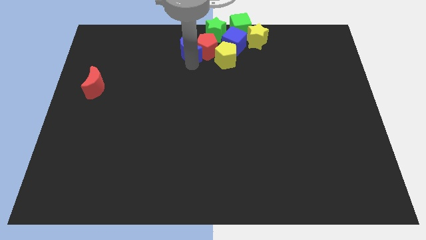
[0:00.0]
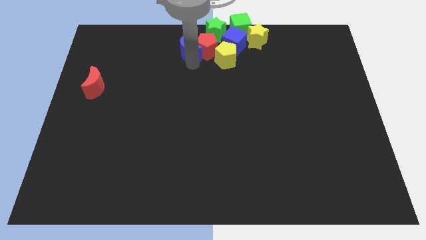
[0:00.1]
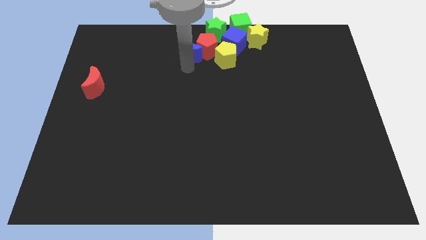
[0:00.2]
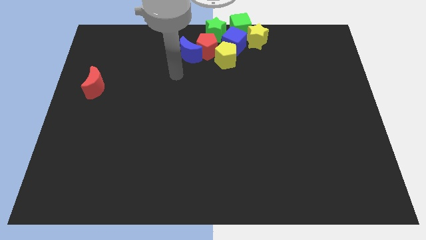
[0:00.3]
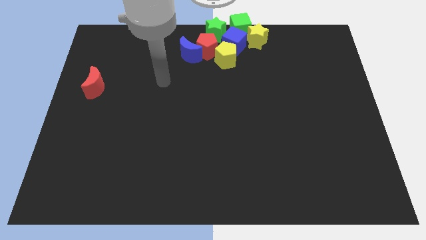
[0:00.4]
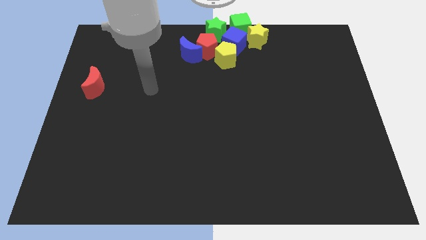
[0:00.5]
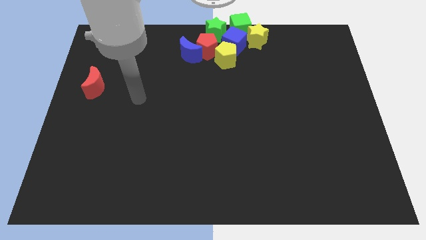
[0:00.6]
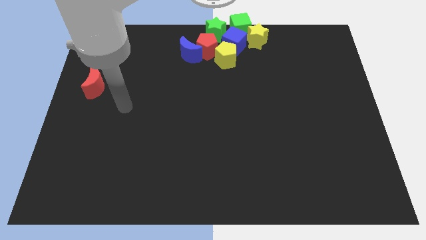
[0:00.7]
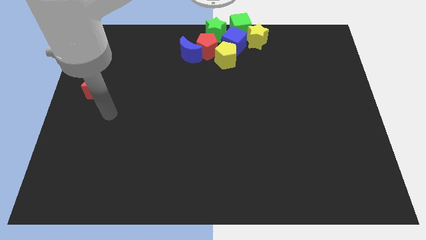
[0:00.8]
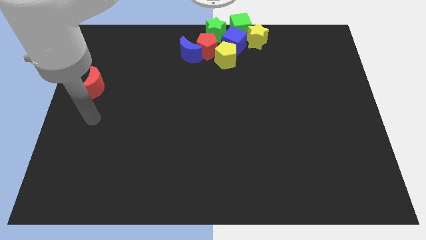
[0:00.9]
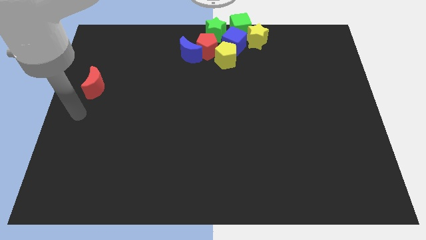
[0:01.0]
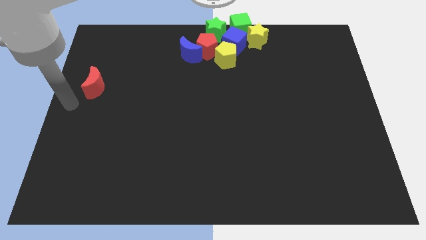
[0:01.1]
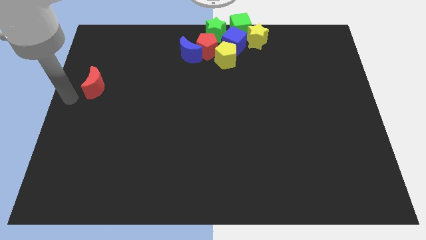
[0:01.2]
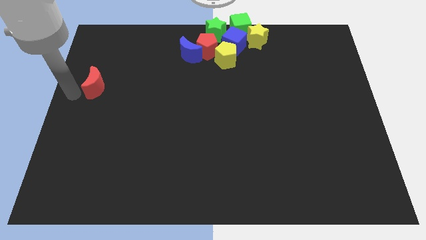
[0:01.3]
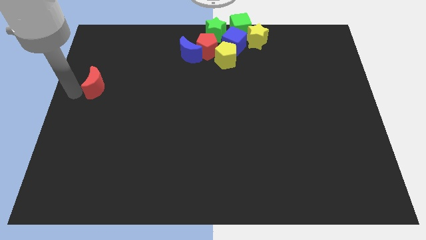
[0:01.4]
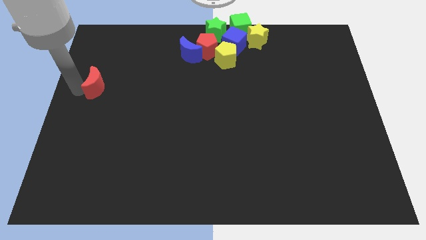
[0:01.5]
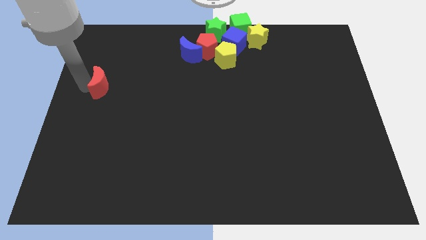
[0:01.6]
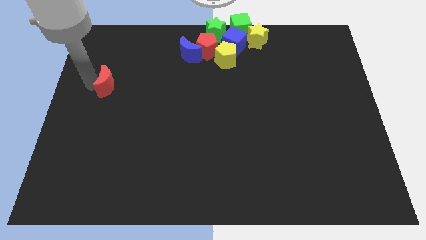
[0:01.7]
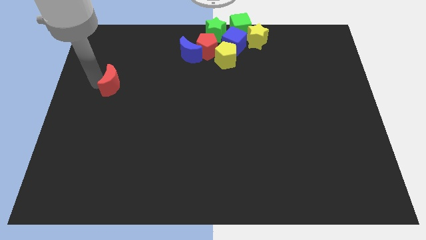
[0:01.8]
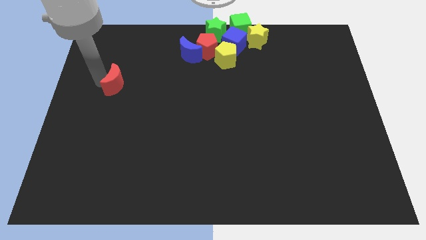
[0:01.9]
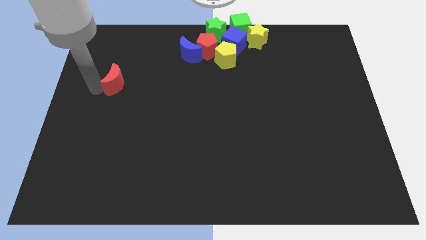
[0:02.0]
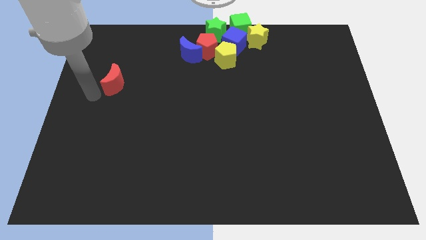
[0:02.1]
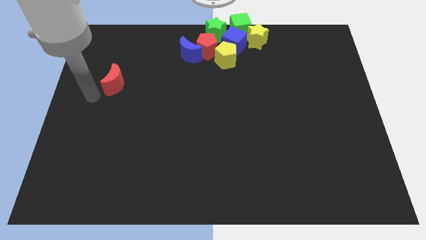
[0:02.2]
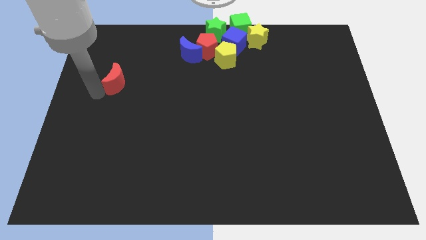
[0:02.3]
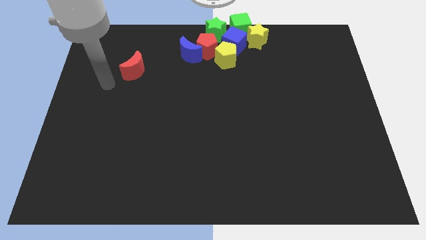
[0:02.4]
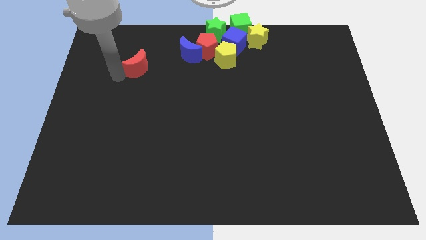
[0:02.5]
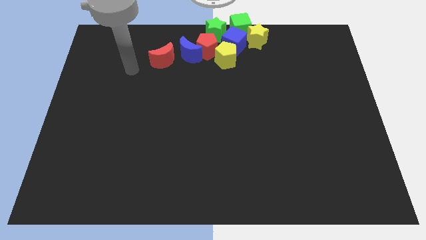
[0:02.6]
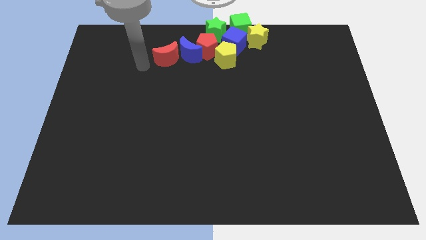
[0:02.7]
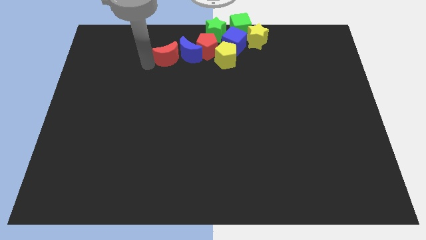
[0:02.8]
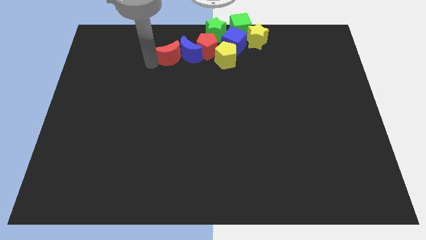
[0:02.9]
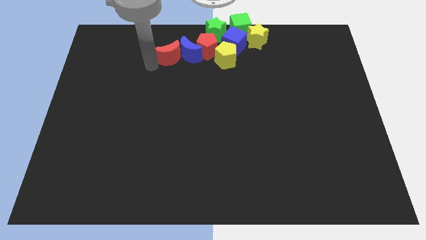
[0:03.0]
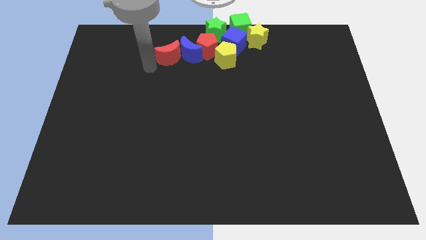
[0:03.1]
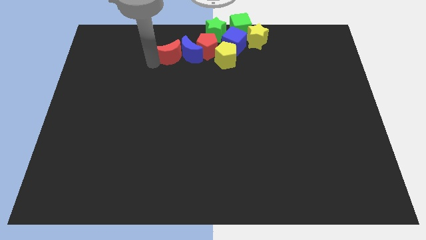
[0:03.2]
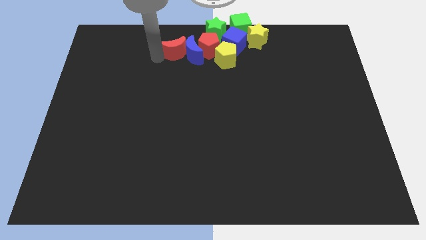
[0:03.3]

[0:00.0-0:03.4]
push the red crescent towards the blue crescent

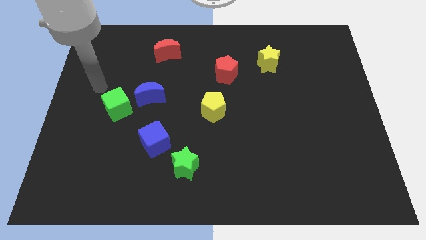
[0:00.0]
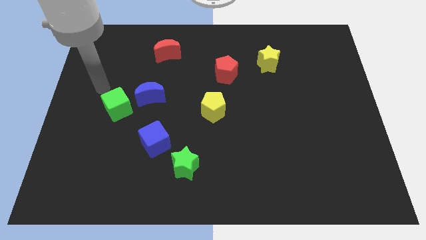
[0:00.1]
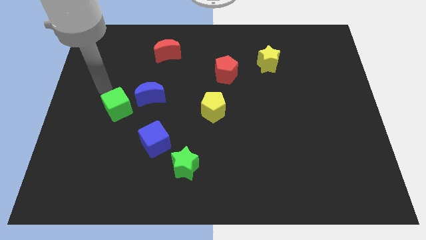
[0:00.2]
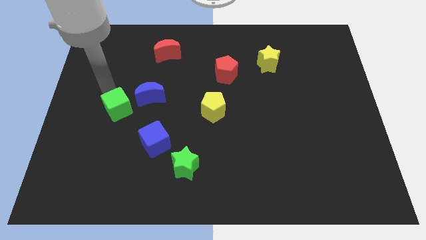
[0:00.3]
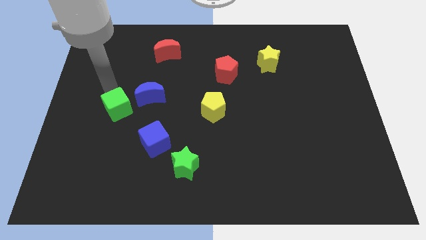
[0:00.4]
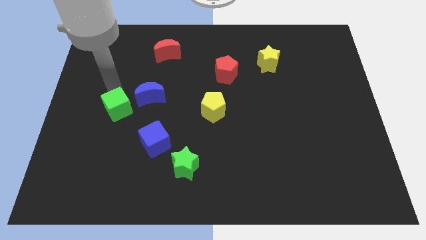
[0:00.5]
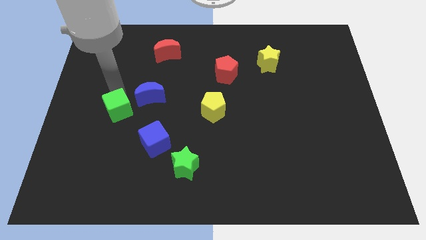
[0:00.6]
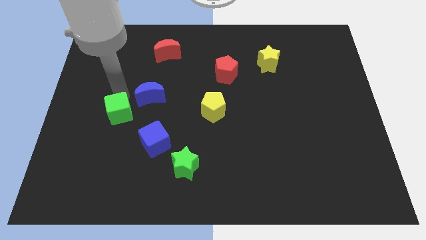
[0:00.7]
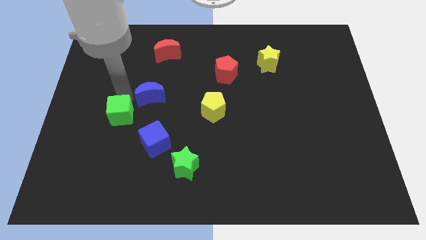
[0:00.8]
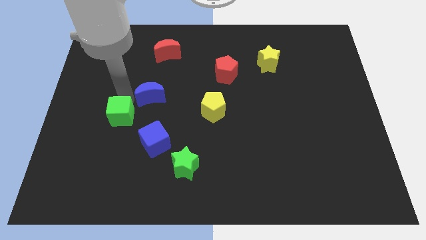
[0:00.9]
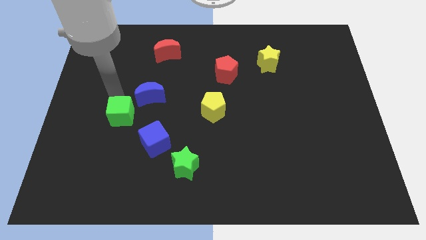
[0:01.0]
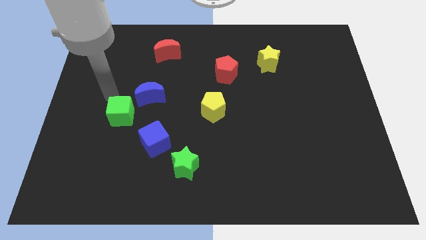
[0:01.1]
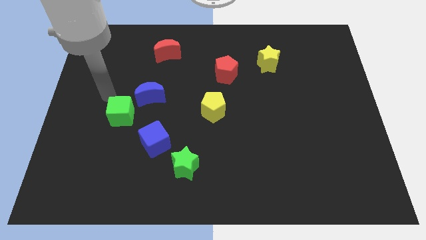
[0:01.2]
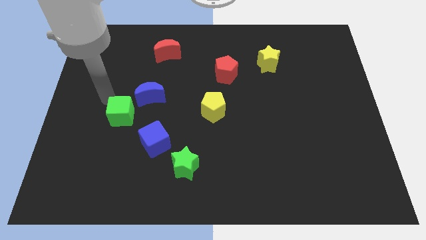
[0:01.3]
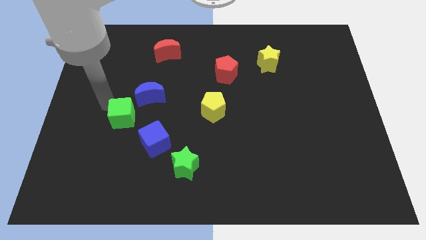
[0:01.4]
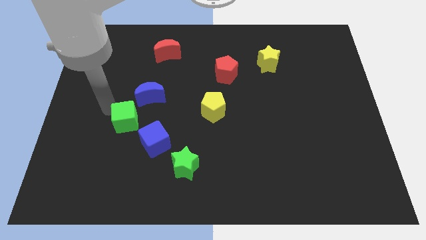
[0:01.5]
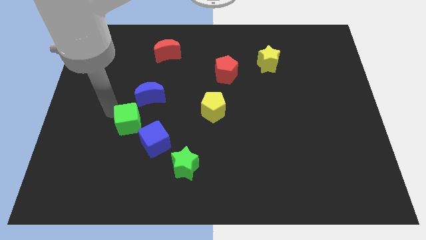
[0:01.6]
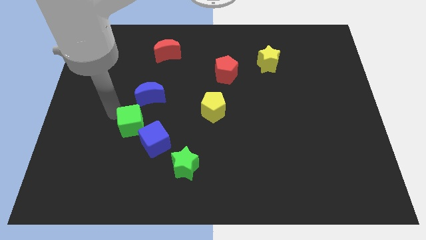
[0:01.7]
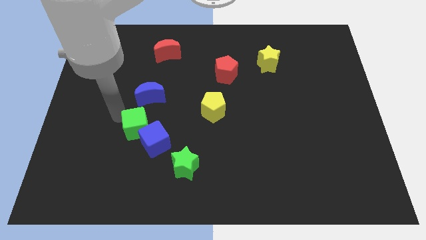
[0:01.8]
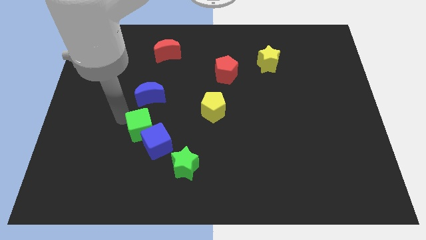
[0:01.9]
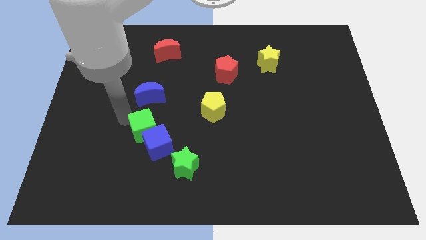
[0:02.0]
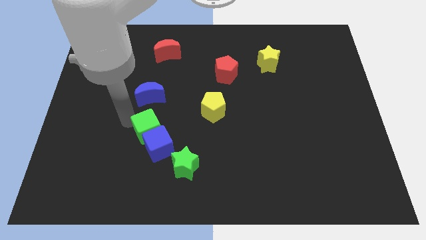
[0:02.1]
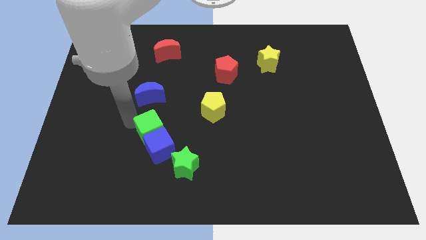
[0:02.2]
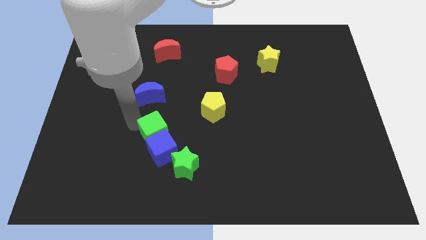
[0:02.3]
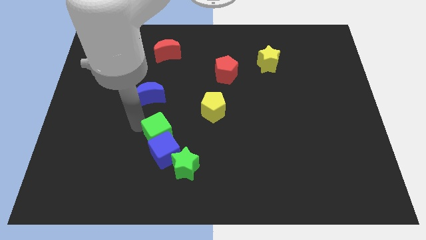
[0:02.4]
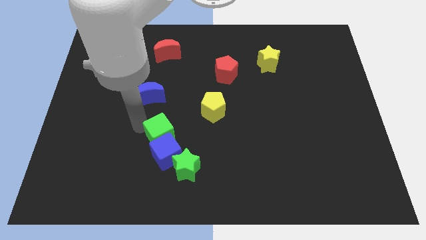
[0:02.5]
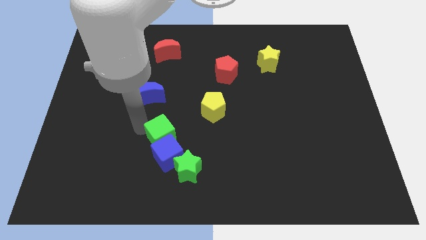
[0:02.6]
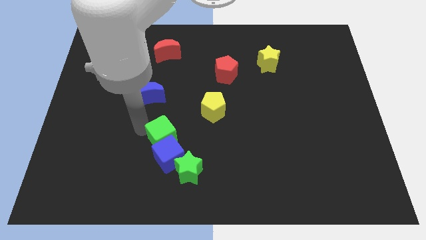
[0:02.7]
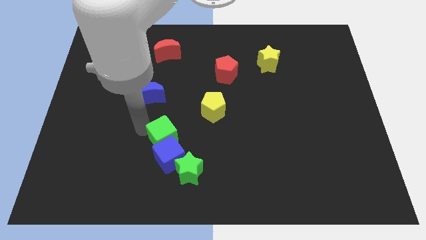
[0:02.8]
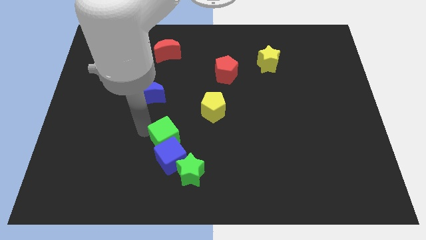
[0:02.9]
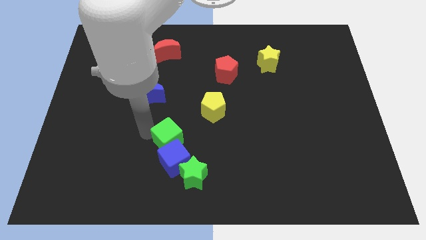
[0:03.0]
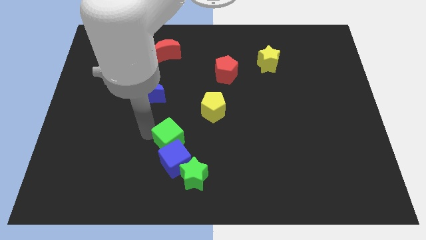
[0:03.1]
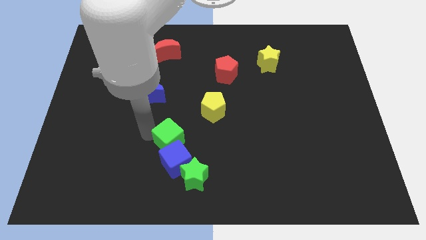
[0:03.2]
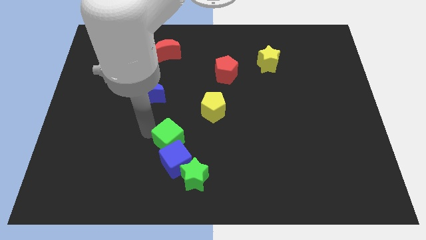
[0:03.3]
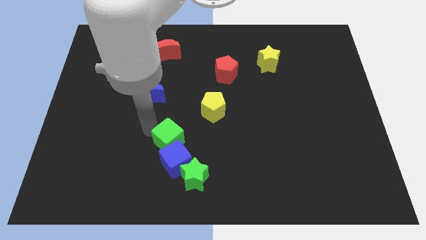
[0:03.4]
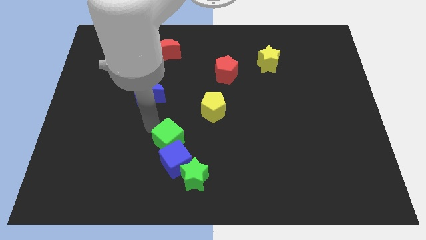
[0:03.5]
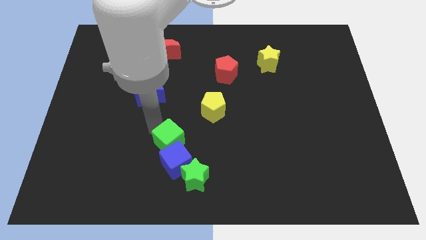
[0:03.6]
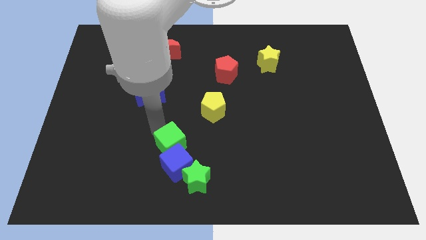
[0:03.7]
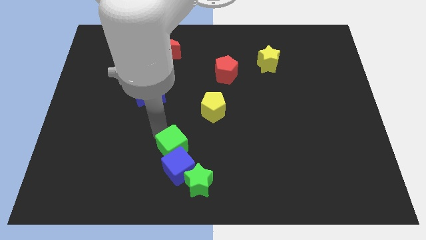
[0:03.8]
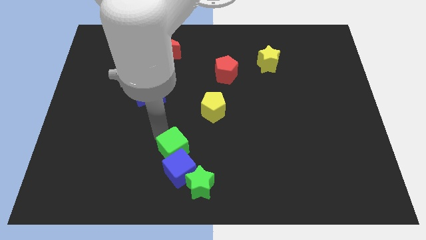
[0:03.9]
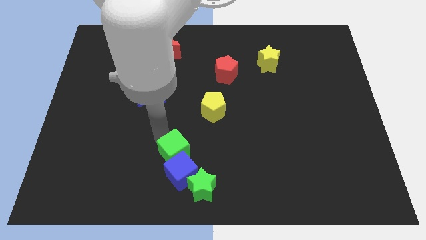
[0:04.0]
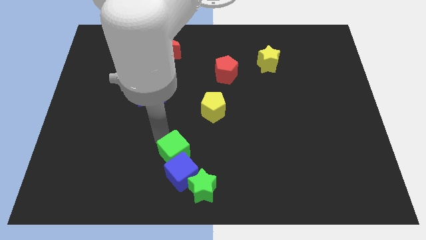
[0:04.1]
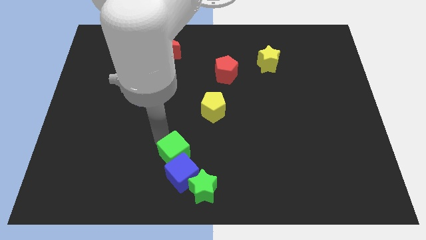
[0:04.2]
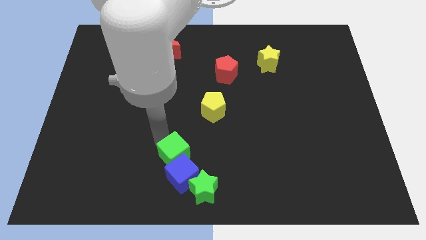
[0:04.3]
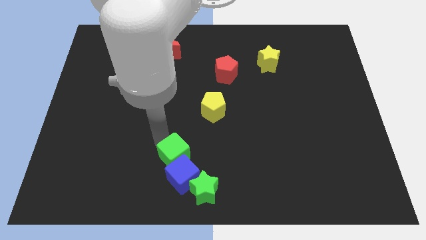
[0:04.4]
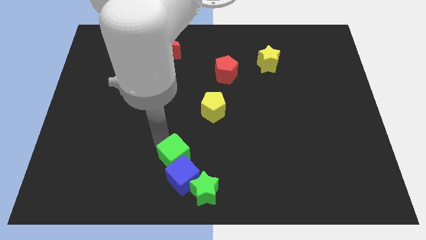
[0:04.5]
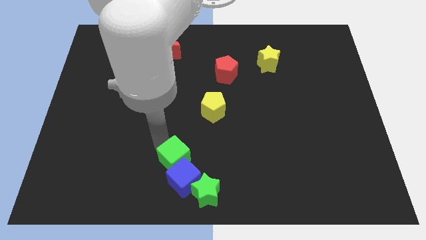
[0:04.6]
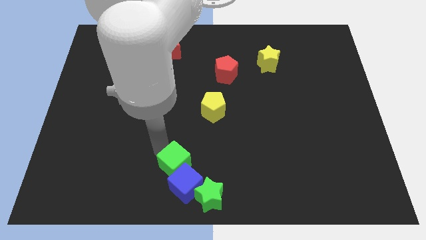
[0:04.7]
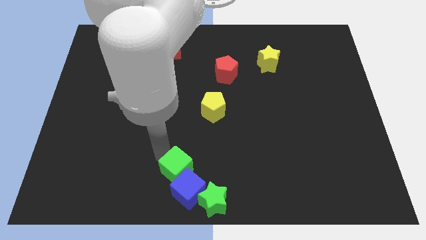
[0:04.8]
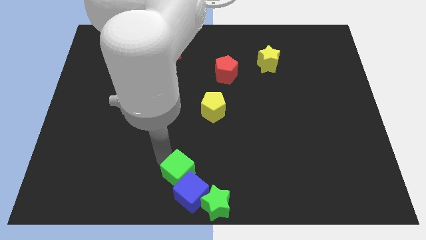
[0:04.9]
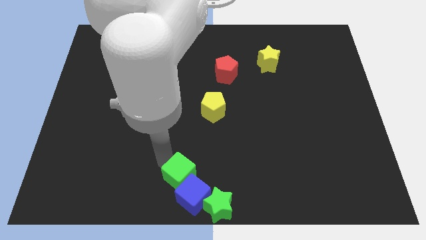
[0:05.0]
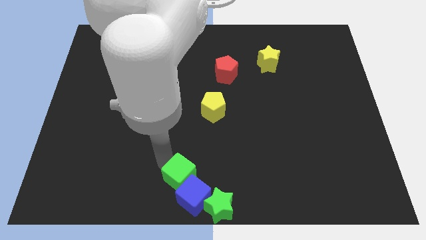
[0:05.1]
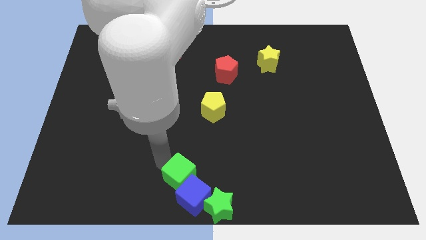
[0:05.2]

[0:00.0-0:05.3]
push the green cube into the blue cube

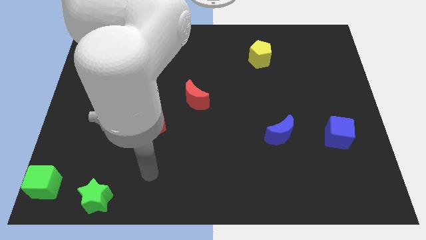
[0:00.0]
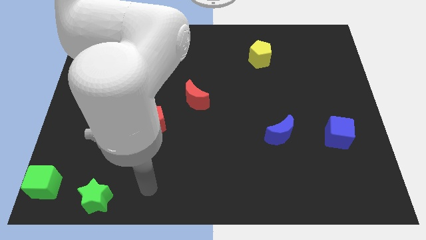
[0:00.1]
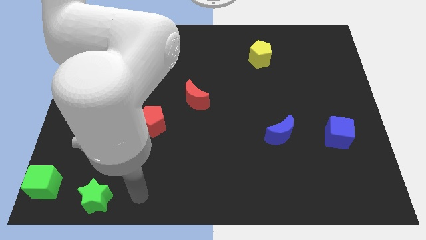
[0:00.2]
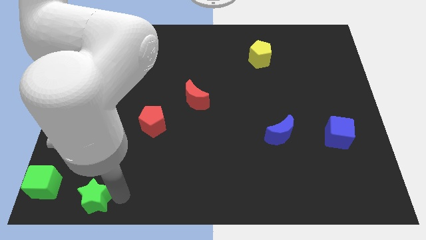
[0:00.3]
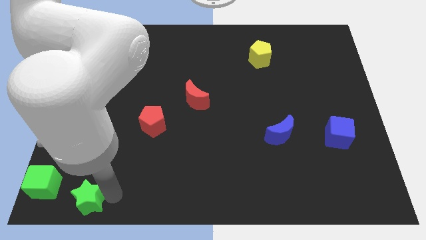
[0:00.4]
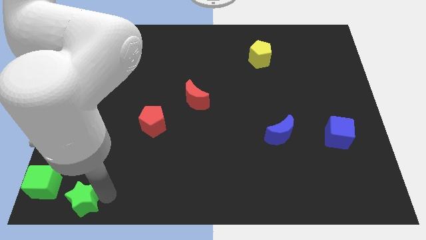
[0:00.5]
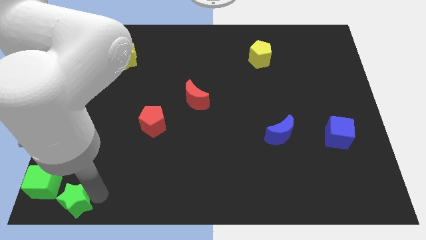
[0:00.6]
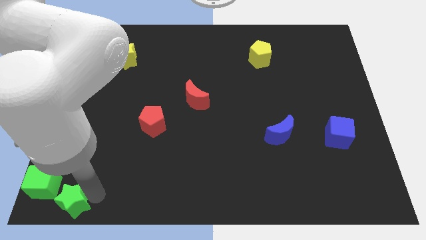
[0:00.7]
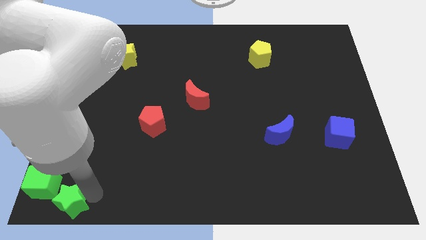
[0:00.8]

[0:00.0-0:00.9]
push green star towards green cube
